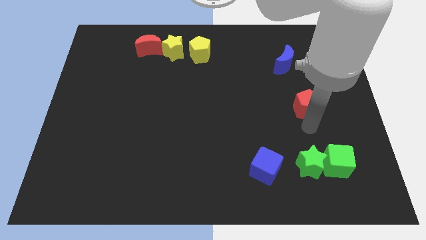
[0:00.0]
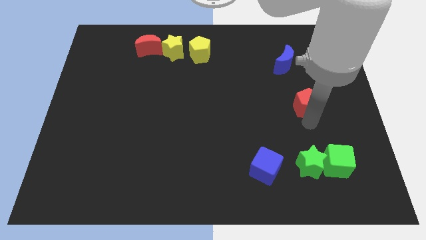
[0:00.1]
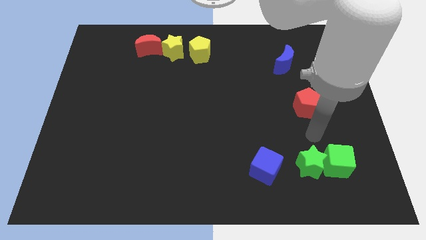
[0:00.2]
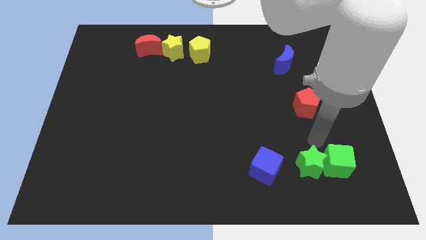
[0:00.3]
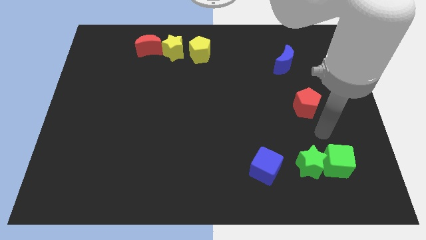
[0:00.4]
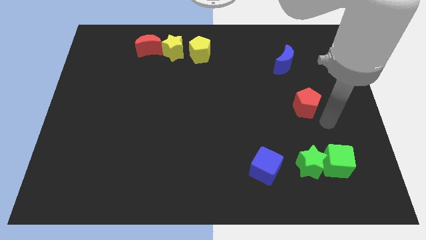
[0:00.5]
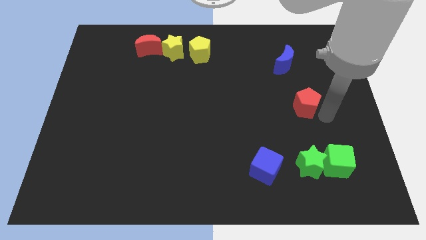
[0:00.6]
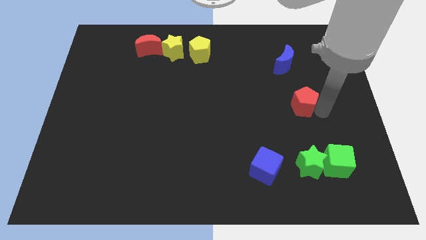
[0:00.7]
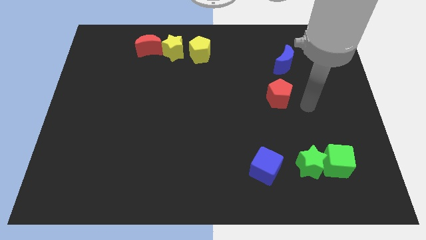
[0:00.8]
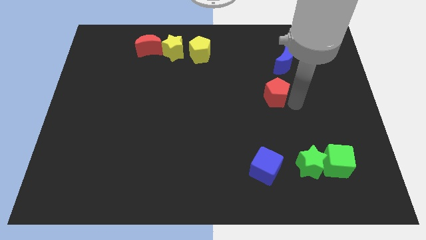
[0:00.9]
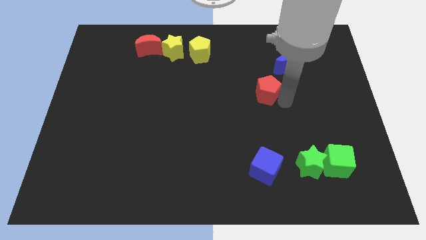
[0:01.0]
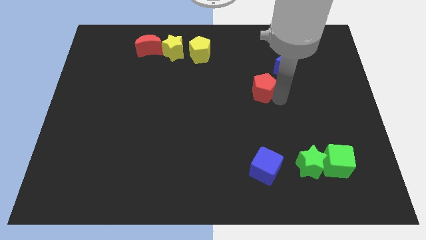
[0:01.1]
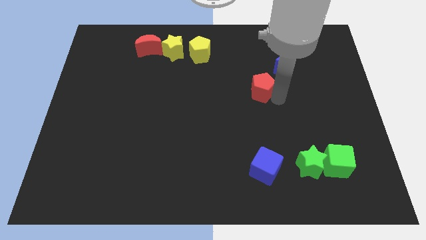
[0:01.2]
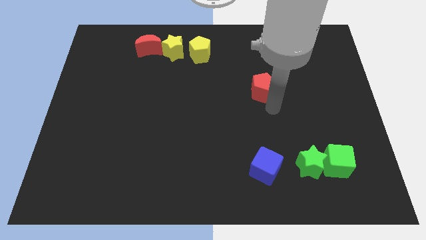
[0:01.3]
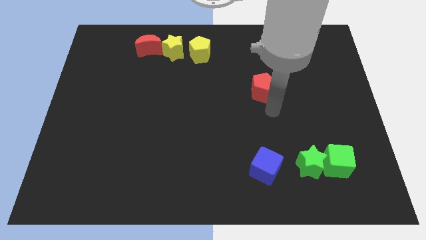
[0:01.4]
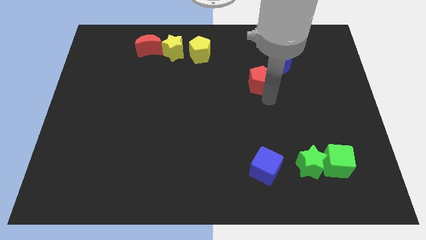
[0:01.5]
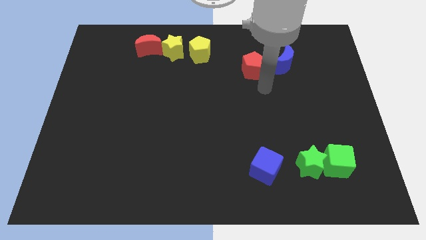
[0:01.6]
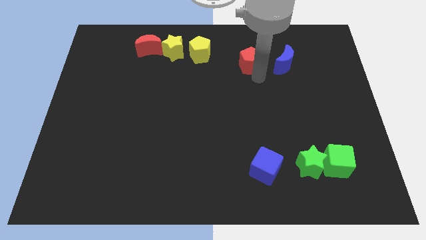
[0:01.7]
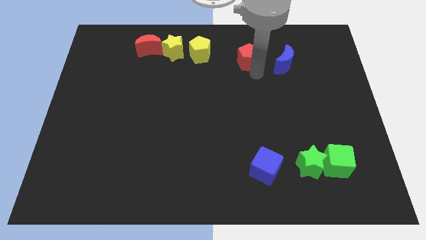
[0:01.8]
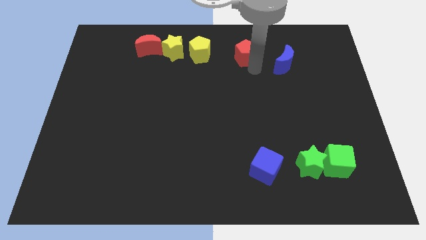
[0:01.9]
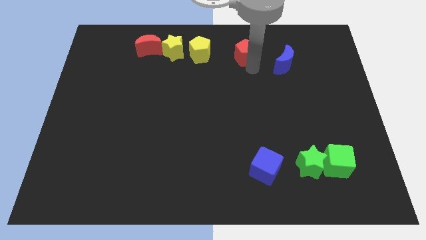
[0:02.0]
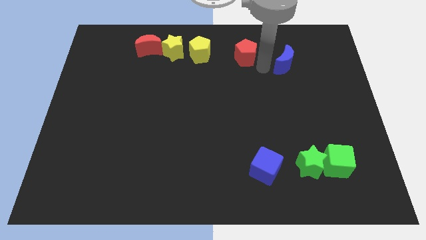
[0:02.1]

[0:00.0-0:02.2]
push the red pentagon to the right of the yellow pentagon

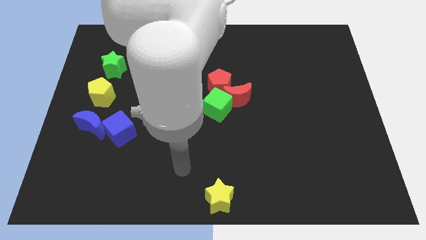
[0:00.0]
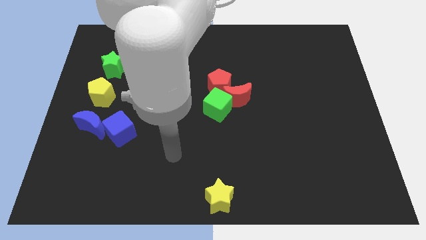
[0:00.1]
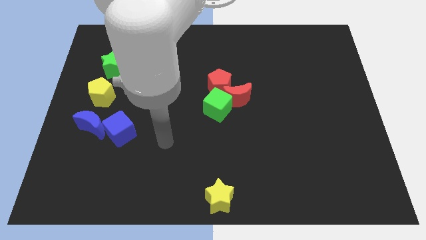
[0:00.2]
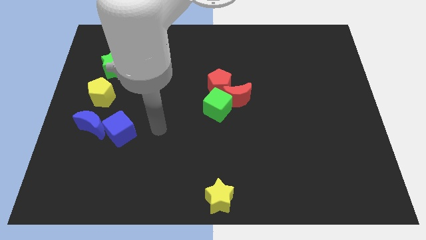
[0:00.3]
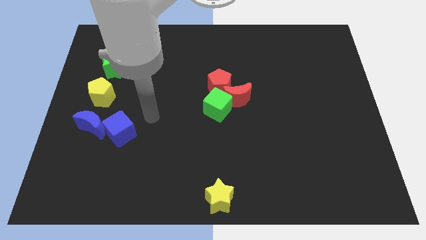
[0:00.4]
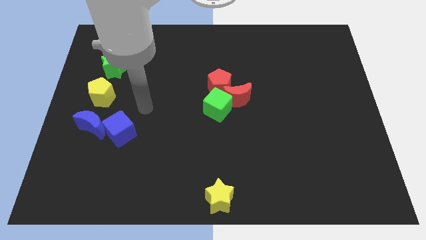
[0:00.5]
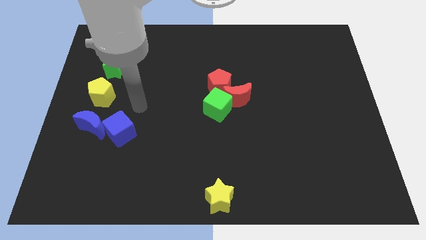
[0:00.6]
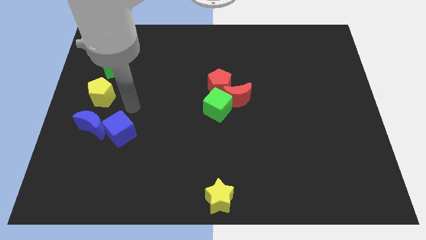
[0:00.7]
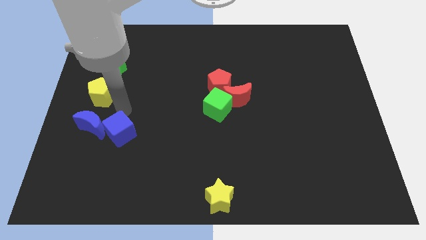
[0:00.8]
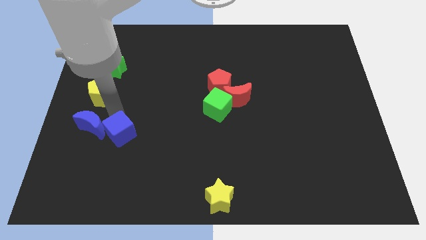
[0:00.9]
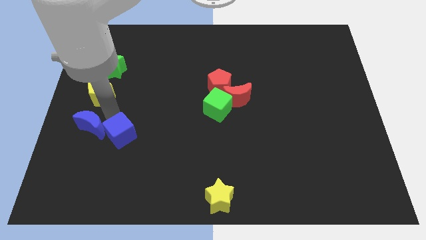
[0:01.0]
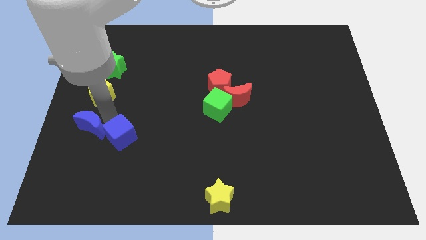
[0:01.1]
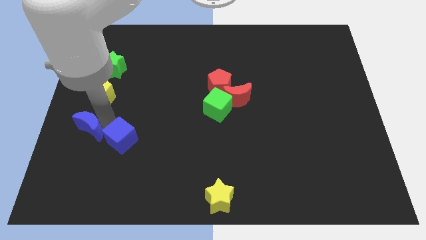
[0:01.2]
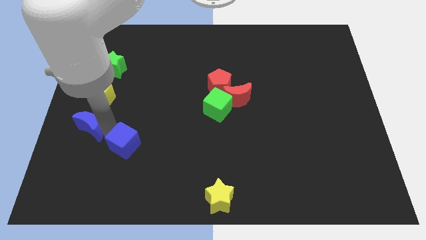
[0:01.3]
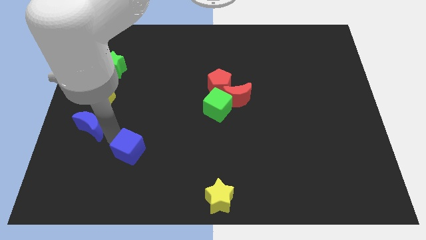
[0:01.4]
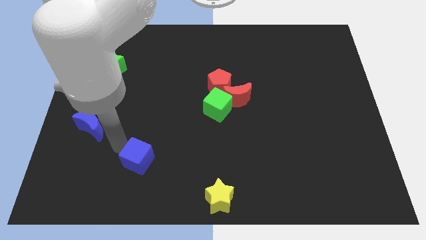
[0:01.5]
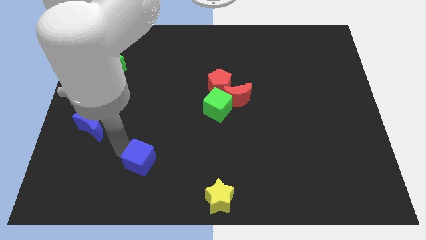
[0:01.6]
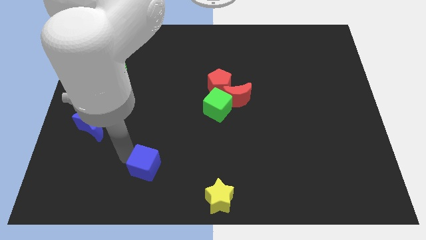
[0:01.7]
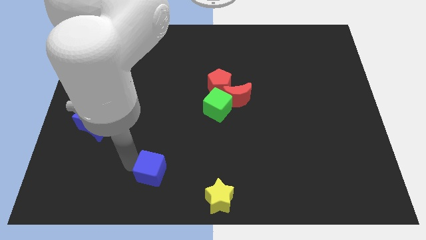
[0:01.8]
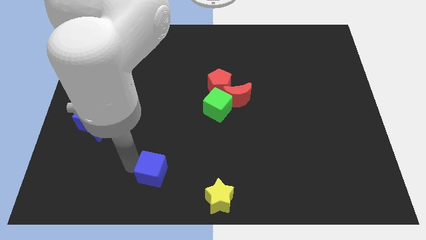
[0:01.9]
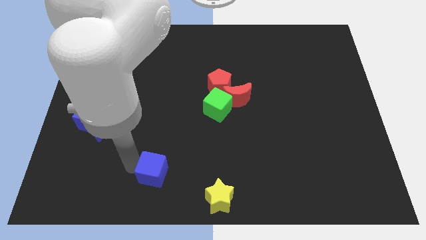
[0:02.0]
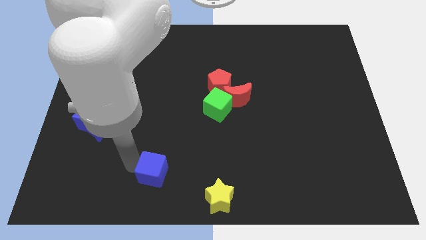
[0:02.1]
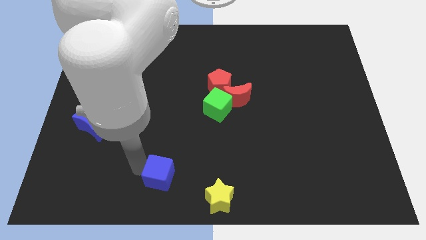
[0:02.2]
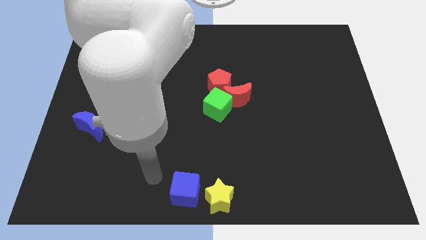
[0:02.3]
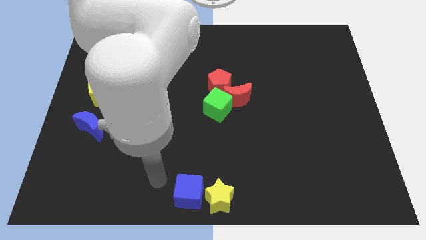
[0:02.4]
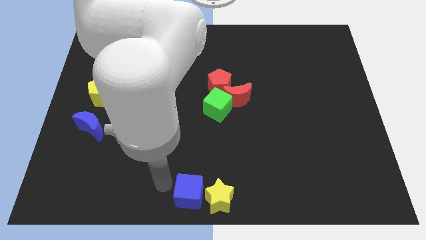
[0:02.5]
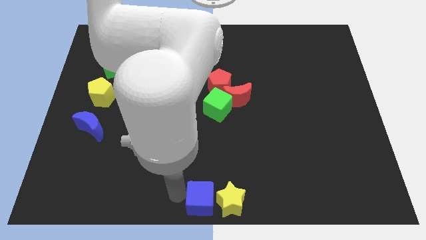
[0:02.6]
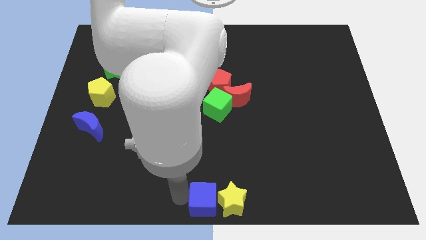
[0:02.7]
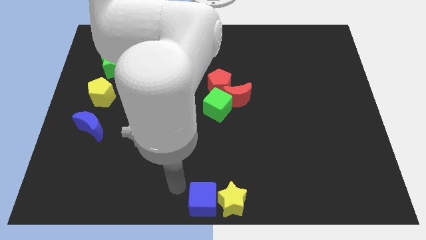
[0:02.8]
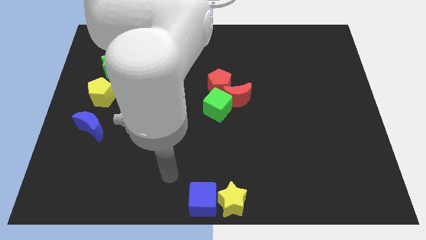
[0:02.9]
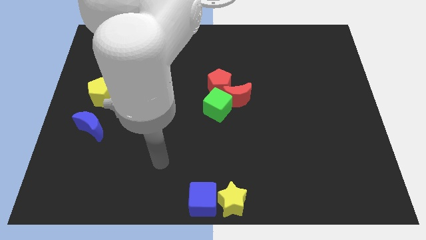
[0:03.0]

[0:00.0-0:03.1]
push the blue cube into the yellow star

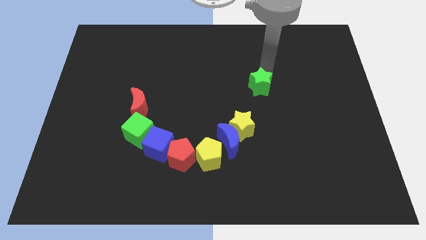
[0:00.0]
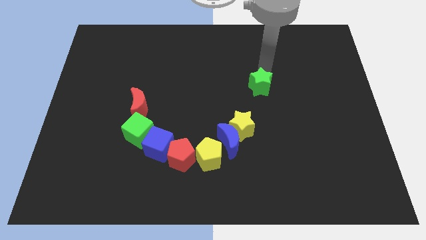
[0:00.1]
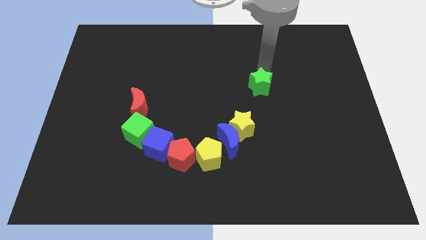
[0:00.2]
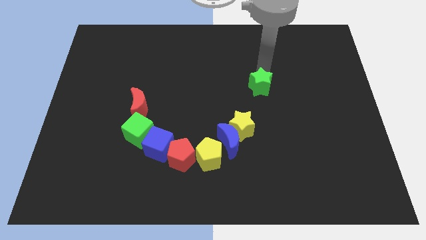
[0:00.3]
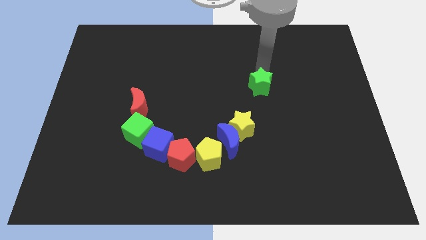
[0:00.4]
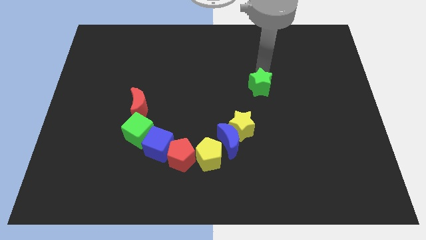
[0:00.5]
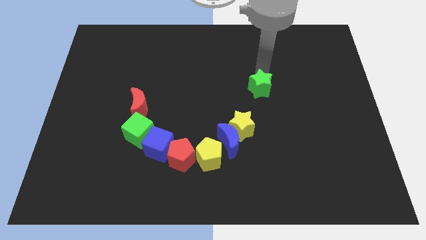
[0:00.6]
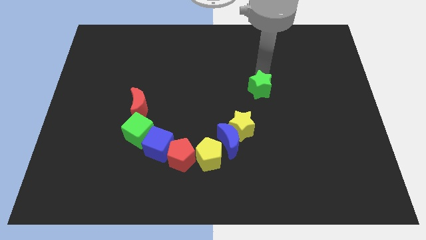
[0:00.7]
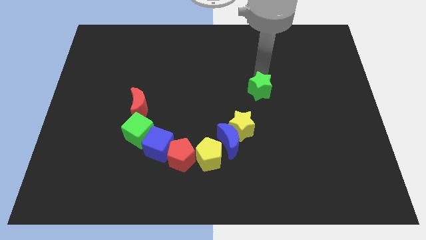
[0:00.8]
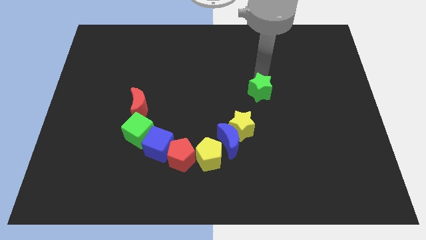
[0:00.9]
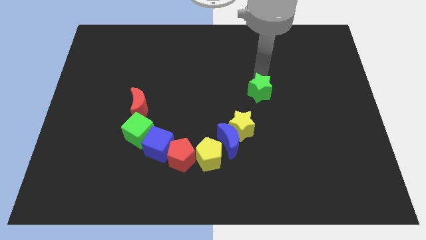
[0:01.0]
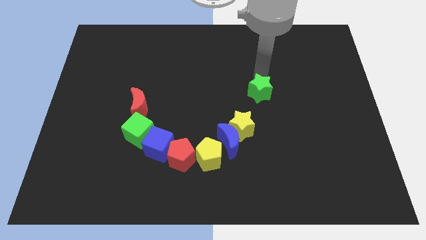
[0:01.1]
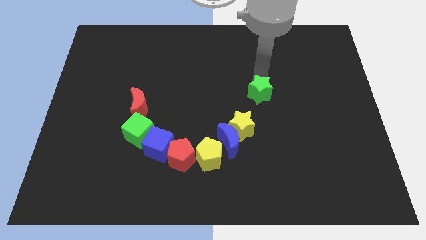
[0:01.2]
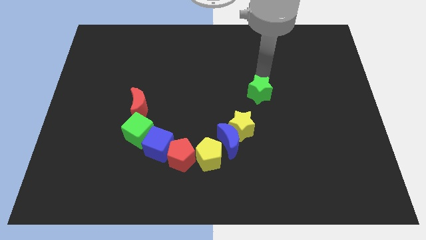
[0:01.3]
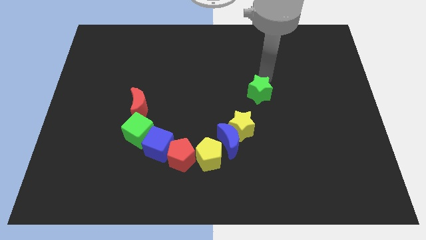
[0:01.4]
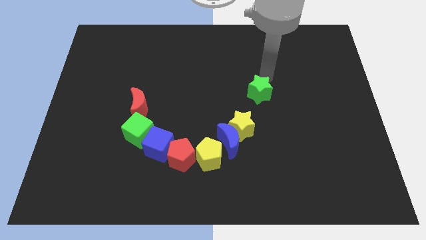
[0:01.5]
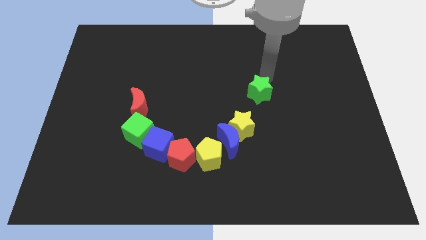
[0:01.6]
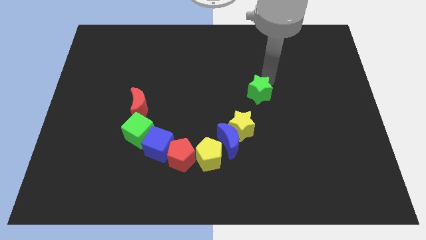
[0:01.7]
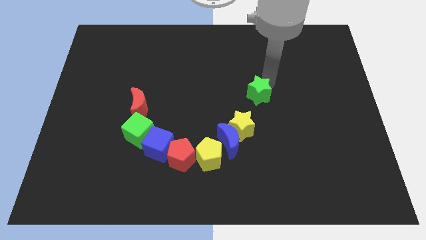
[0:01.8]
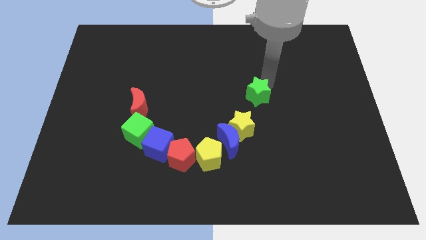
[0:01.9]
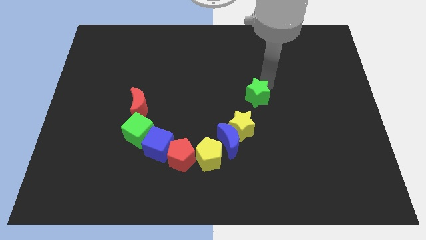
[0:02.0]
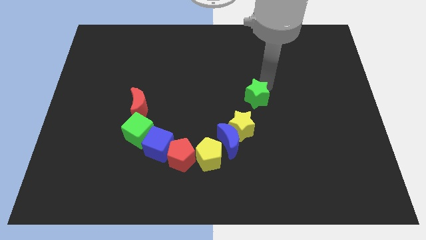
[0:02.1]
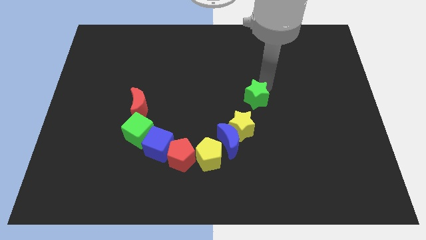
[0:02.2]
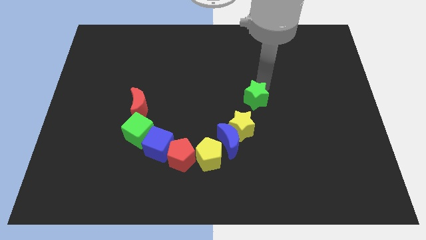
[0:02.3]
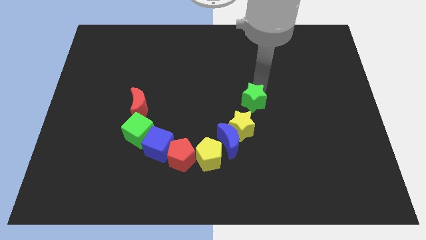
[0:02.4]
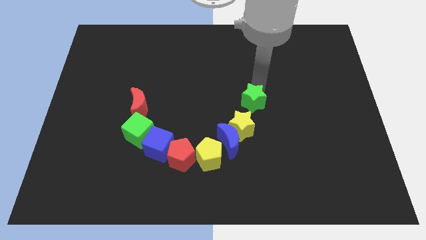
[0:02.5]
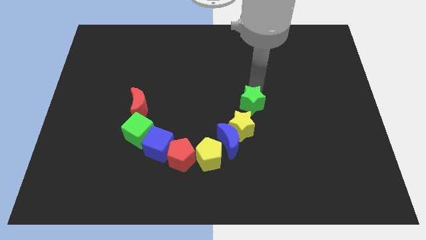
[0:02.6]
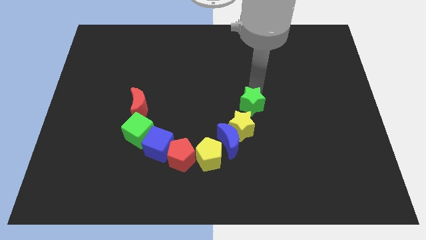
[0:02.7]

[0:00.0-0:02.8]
put the green star parallel to the red crescent

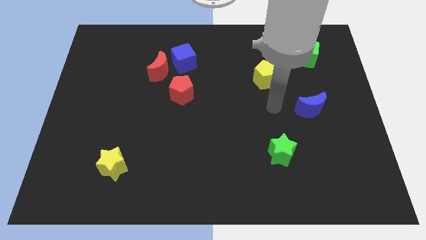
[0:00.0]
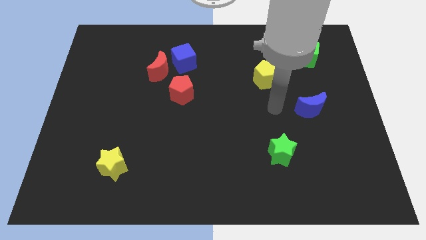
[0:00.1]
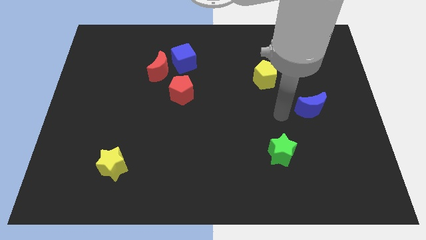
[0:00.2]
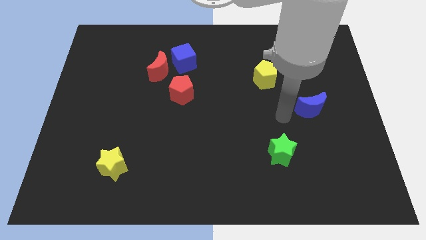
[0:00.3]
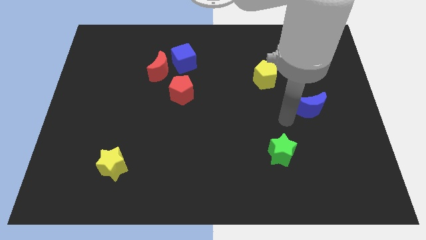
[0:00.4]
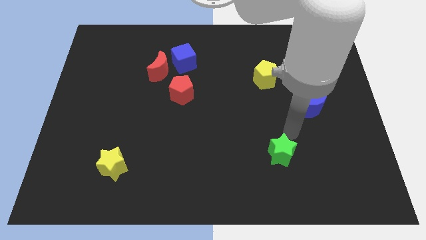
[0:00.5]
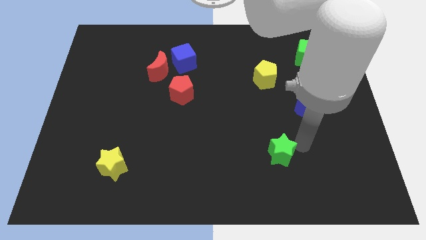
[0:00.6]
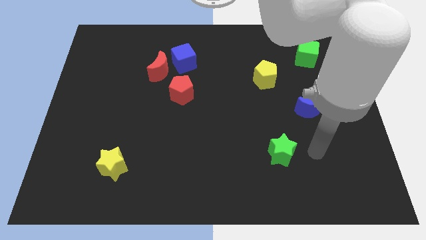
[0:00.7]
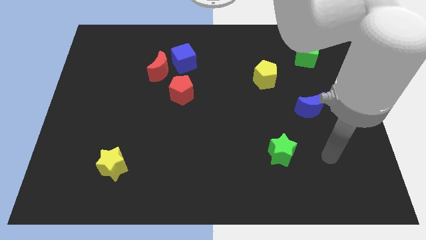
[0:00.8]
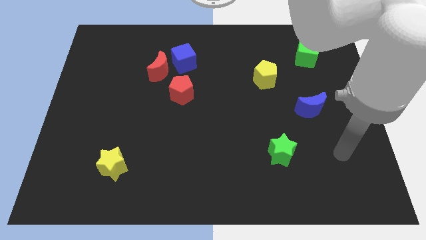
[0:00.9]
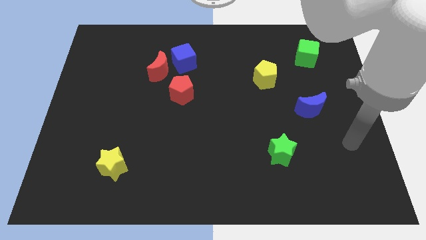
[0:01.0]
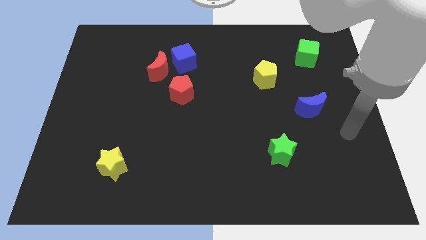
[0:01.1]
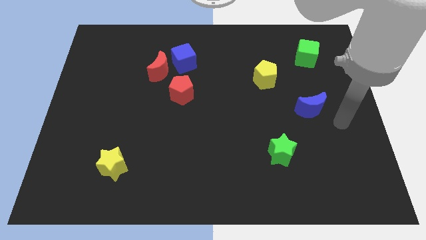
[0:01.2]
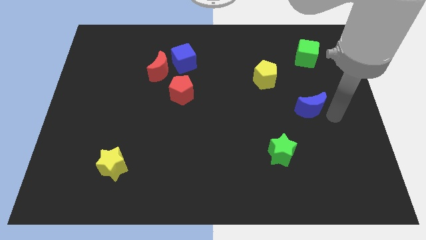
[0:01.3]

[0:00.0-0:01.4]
point the arm to the right of the blue moon
